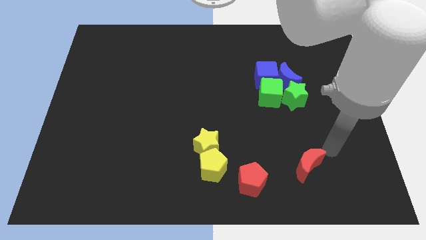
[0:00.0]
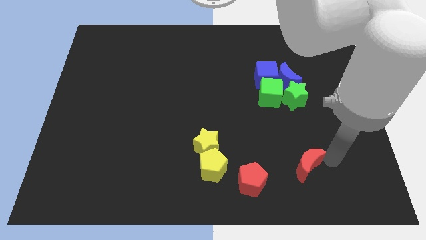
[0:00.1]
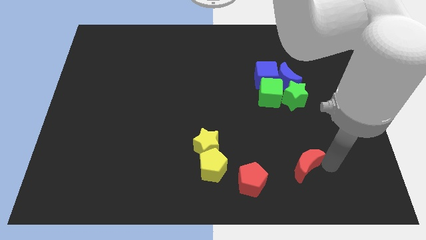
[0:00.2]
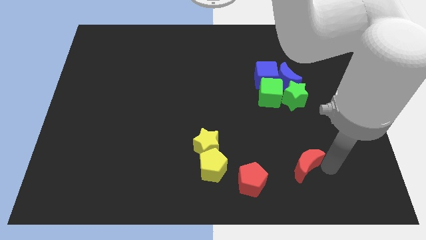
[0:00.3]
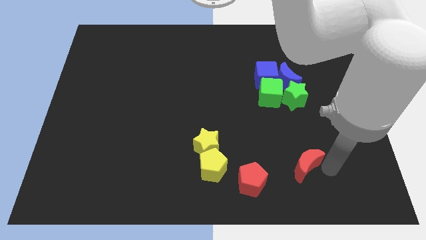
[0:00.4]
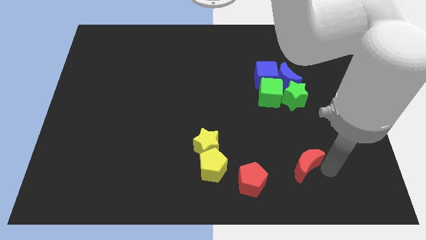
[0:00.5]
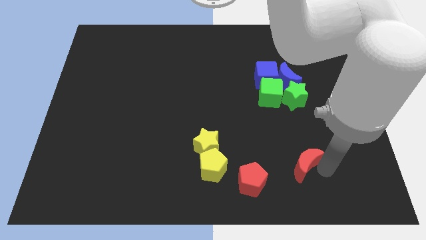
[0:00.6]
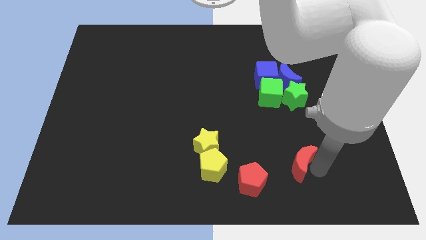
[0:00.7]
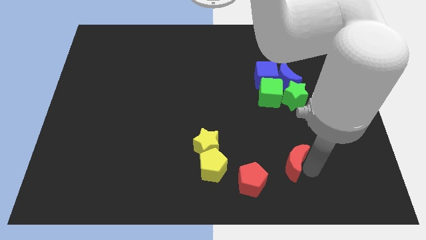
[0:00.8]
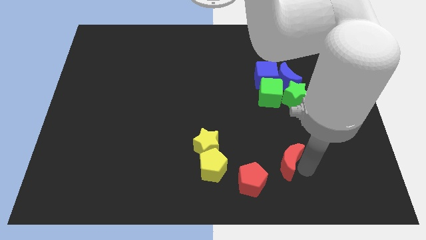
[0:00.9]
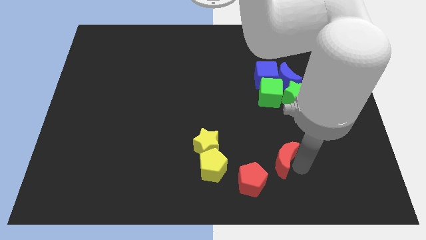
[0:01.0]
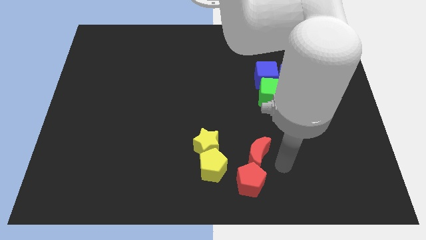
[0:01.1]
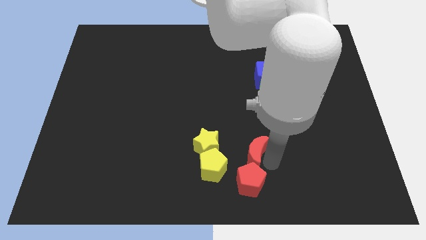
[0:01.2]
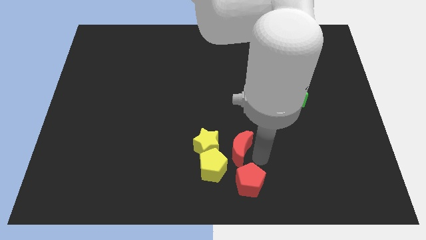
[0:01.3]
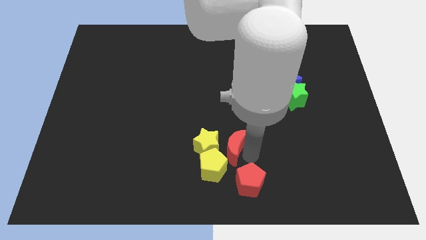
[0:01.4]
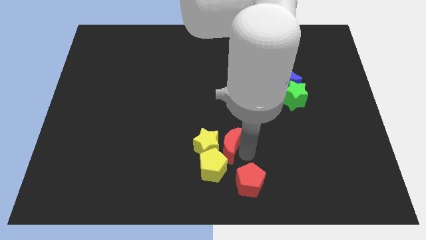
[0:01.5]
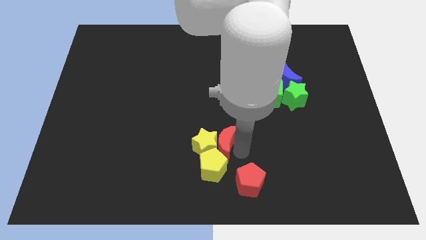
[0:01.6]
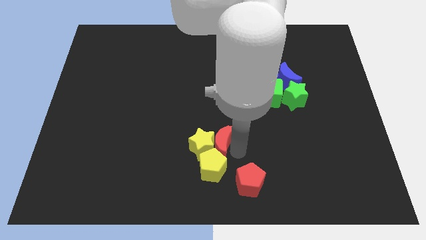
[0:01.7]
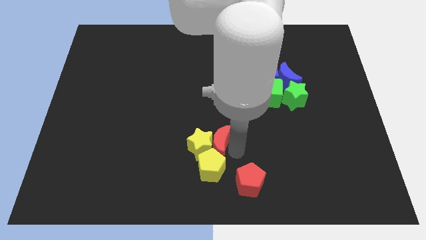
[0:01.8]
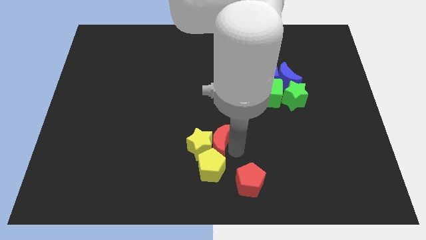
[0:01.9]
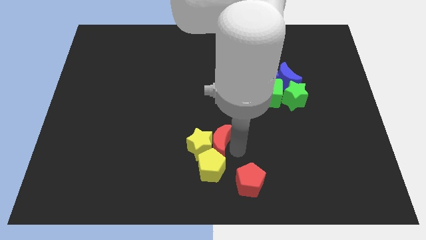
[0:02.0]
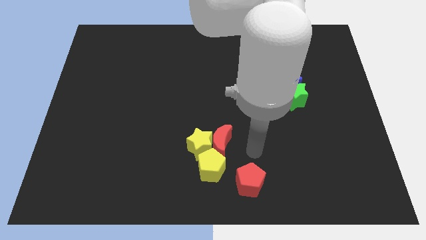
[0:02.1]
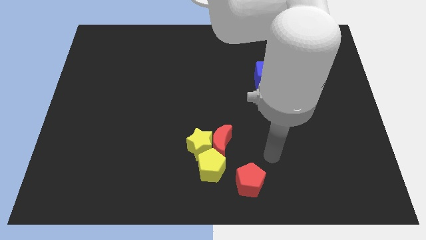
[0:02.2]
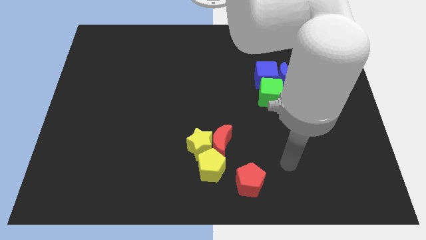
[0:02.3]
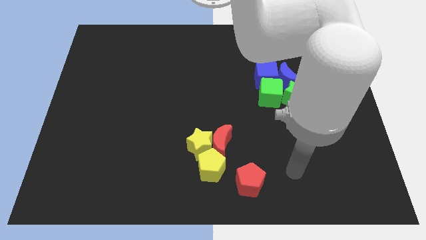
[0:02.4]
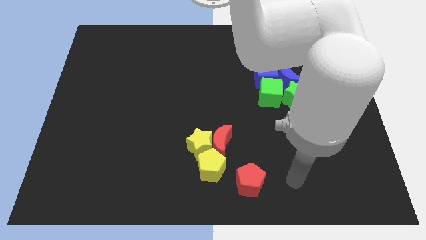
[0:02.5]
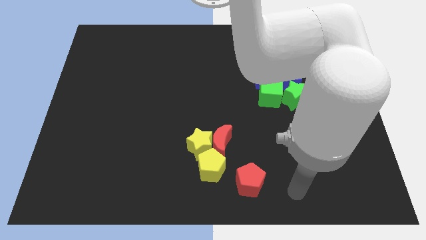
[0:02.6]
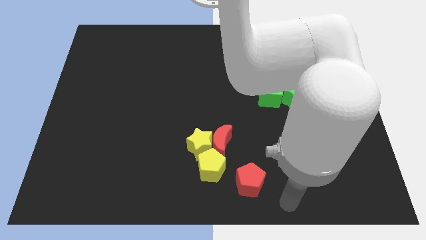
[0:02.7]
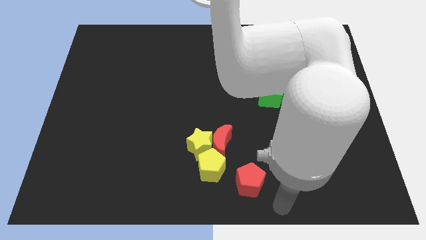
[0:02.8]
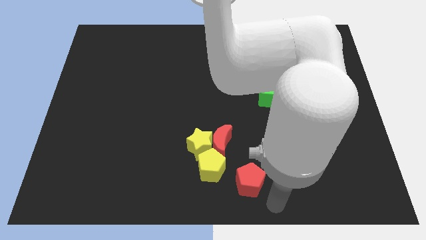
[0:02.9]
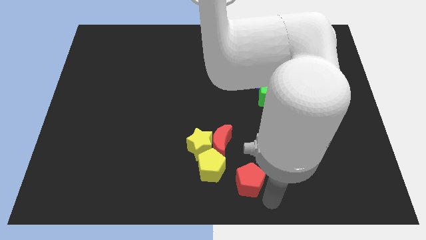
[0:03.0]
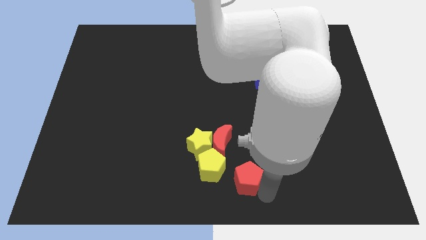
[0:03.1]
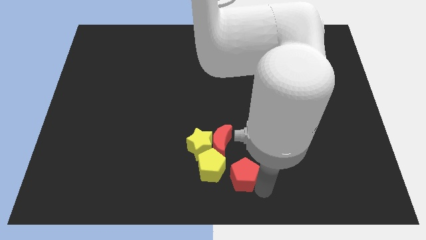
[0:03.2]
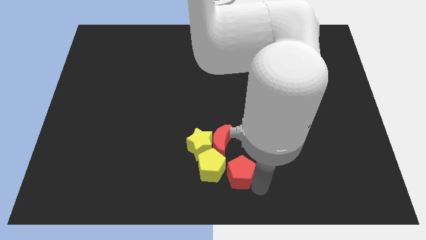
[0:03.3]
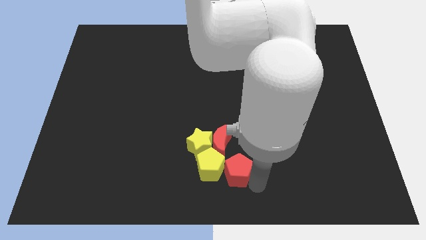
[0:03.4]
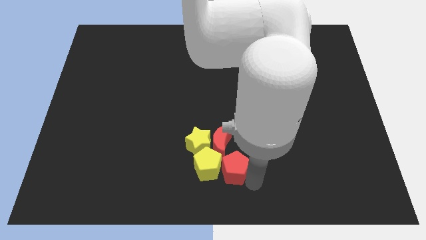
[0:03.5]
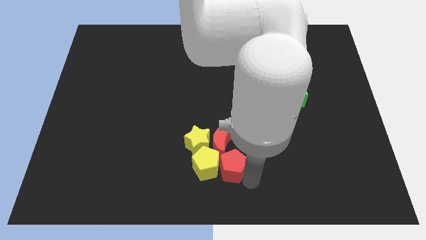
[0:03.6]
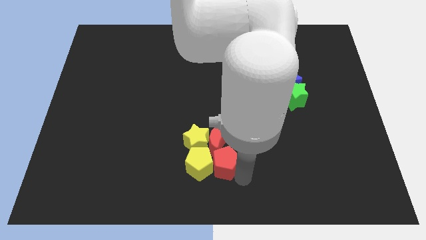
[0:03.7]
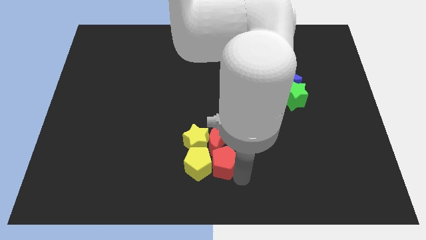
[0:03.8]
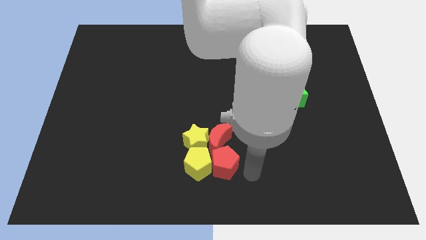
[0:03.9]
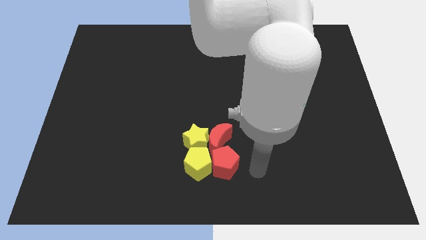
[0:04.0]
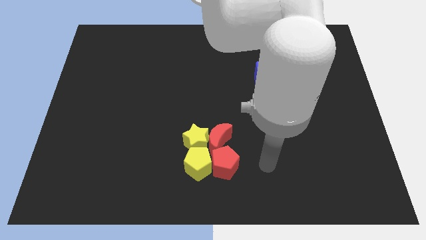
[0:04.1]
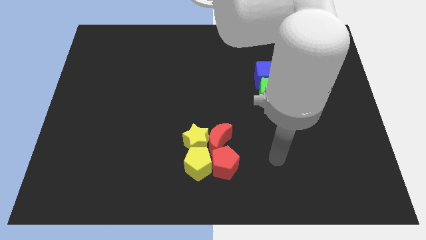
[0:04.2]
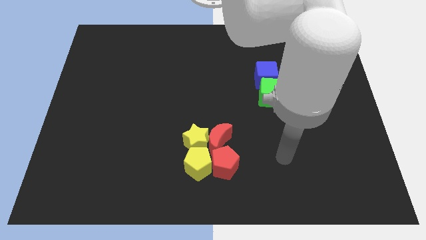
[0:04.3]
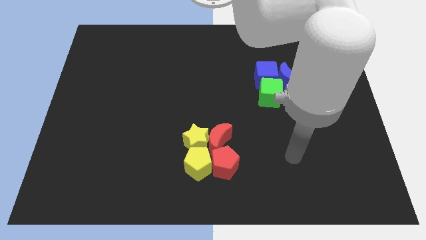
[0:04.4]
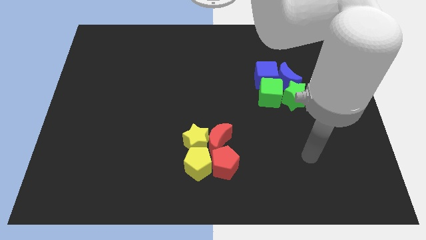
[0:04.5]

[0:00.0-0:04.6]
move red blocks into yellow blocks

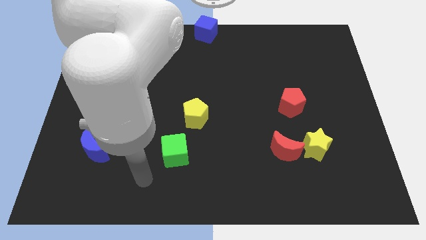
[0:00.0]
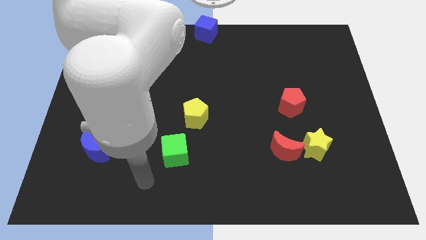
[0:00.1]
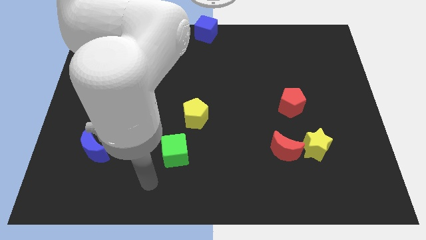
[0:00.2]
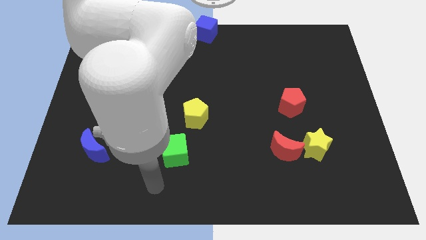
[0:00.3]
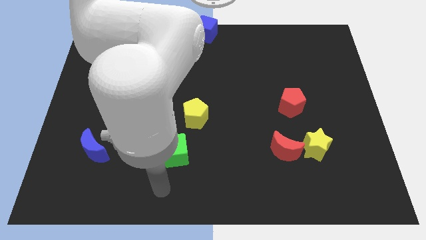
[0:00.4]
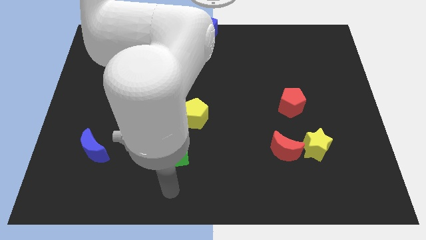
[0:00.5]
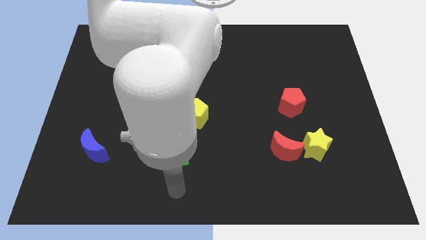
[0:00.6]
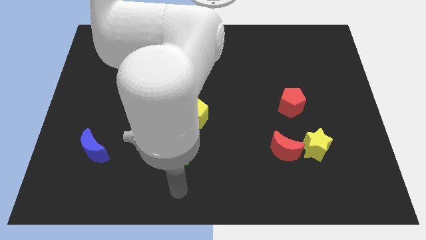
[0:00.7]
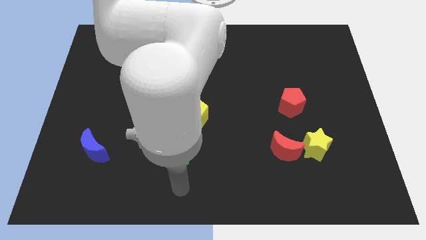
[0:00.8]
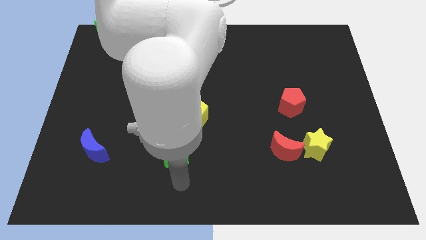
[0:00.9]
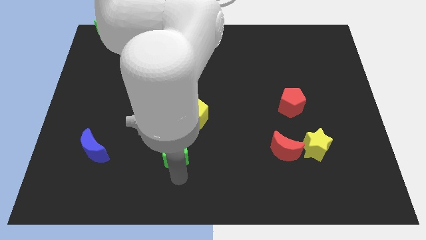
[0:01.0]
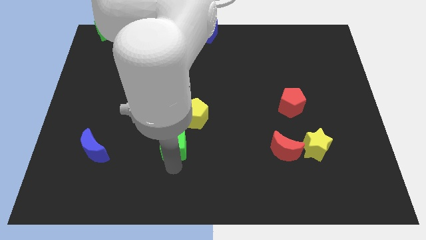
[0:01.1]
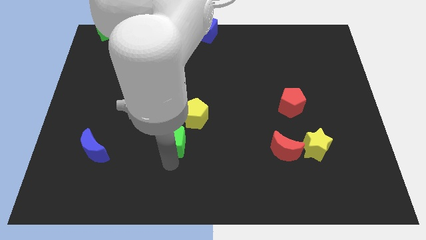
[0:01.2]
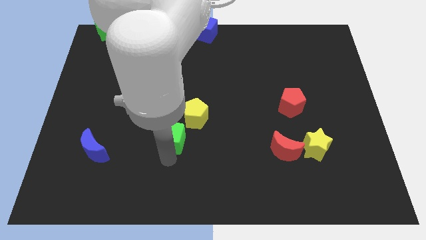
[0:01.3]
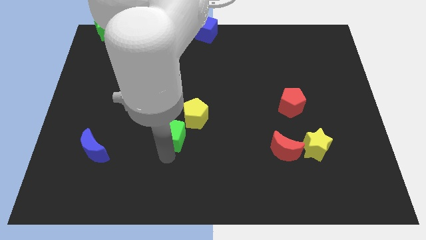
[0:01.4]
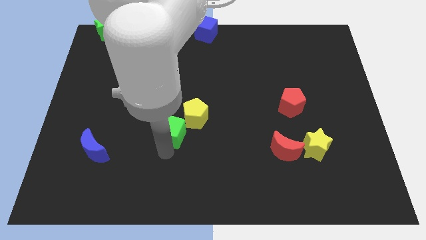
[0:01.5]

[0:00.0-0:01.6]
push the green cube slightly up

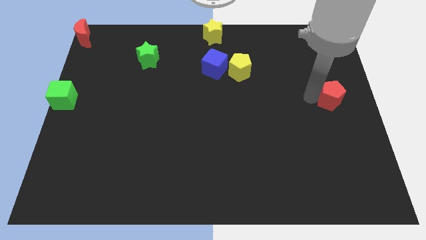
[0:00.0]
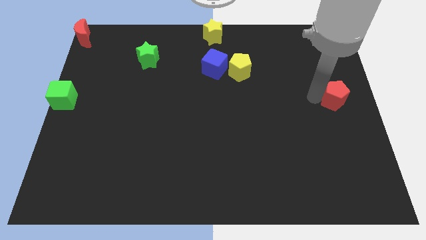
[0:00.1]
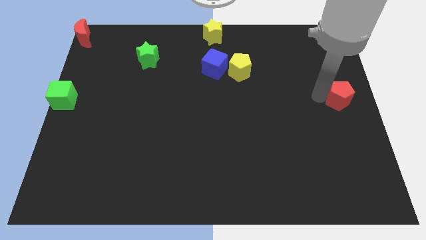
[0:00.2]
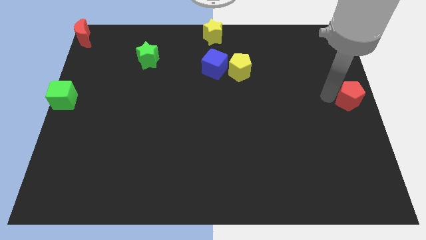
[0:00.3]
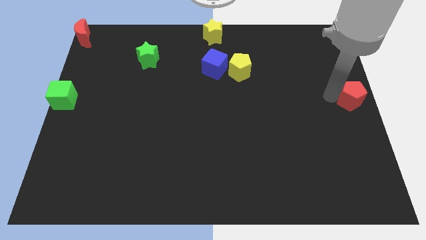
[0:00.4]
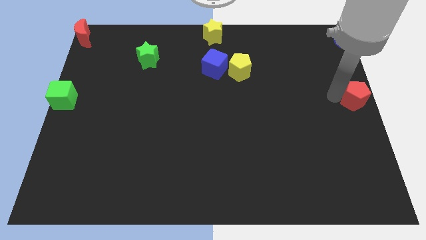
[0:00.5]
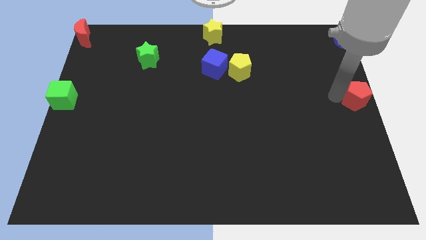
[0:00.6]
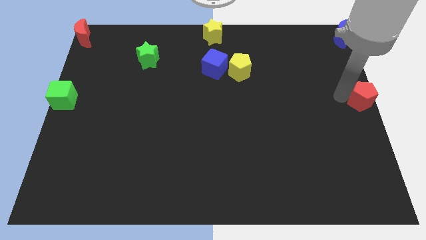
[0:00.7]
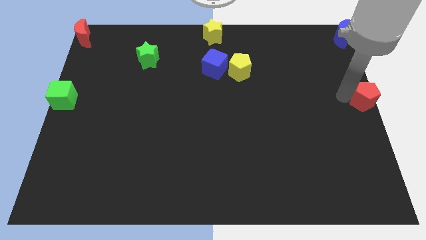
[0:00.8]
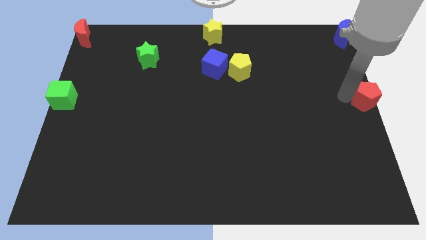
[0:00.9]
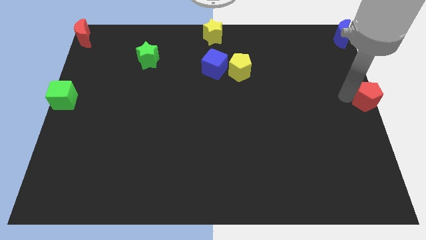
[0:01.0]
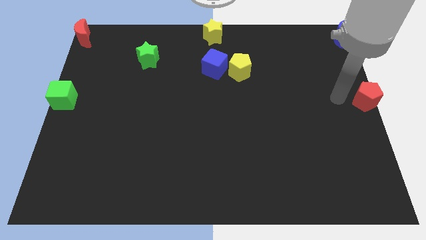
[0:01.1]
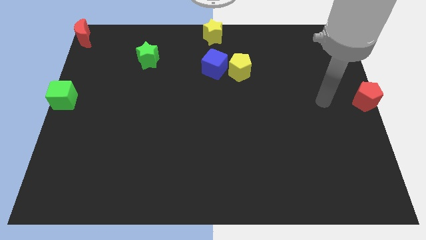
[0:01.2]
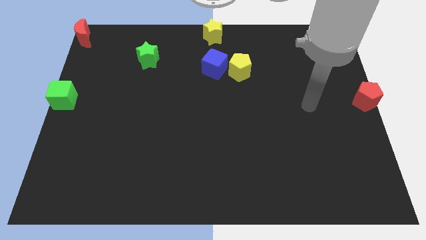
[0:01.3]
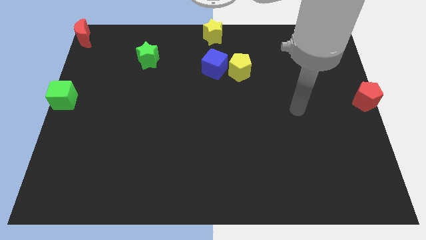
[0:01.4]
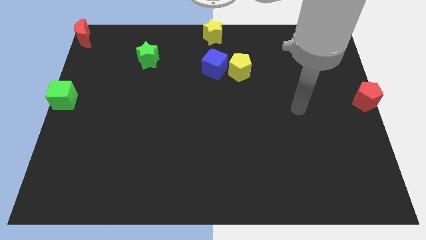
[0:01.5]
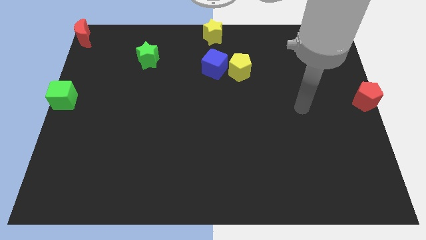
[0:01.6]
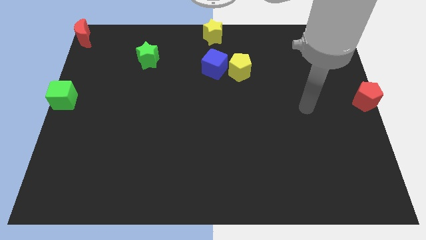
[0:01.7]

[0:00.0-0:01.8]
push the red pentagon to the center right of the board

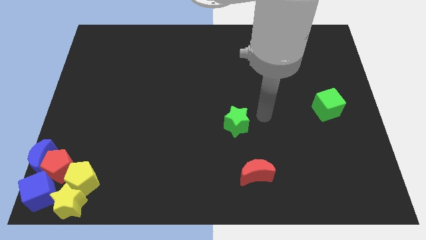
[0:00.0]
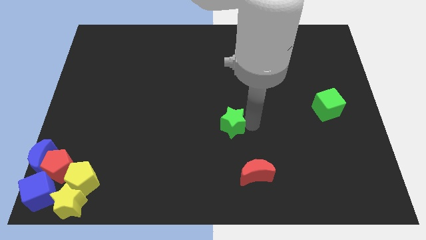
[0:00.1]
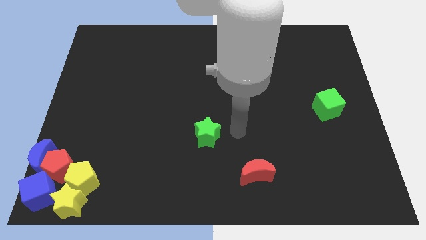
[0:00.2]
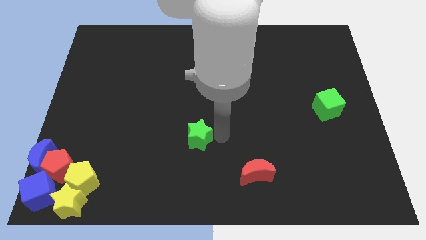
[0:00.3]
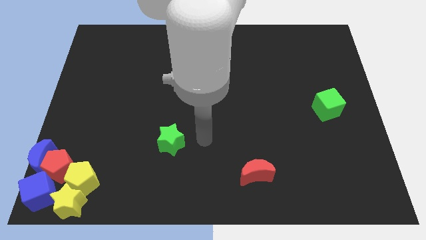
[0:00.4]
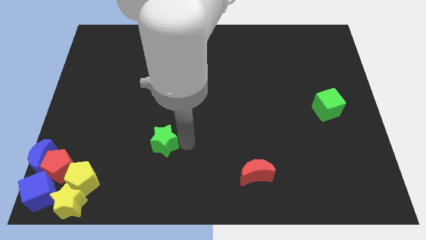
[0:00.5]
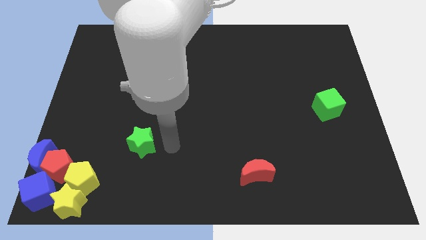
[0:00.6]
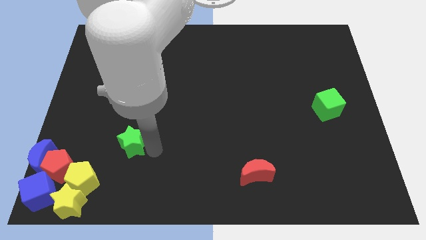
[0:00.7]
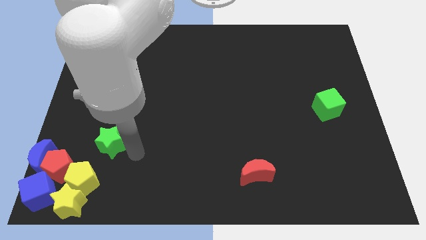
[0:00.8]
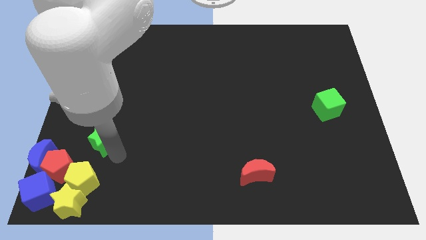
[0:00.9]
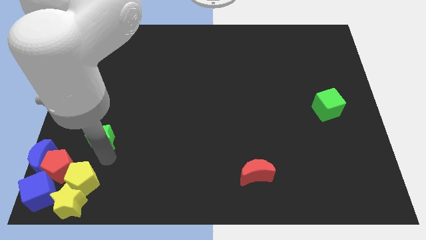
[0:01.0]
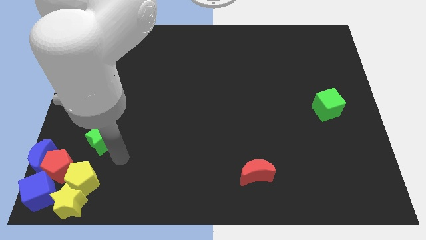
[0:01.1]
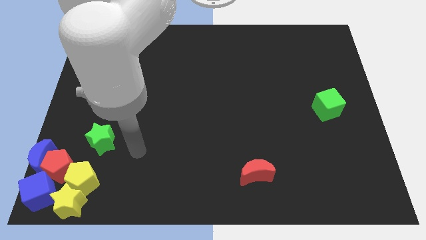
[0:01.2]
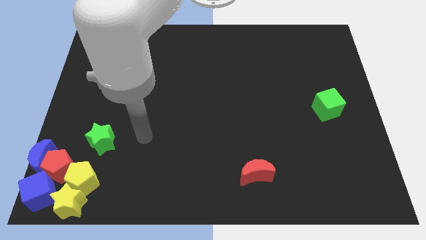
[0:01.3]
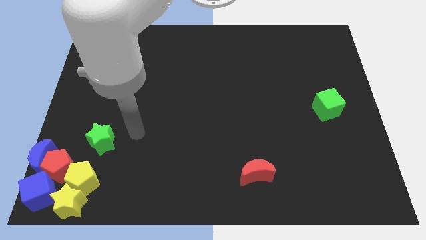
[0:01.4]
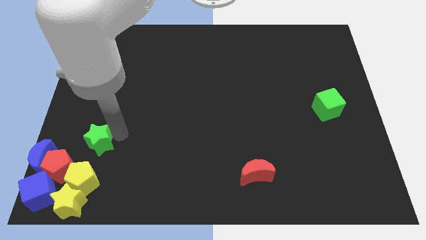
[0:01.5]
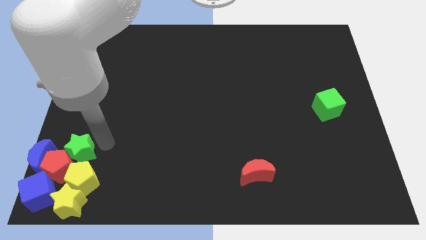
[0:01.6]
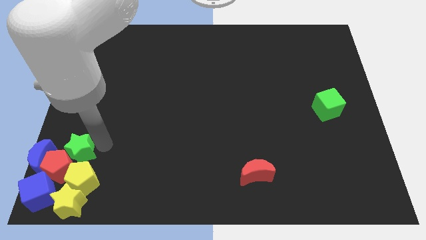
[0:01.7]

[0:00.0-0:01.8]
move the green star into the red pentagon
